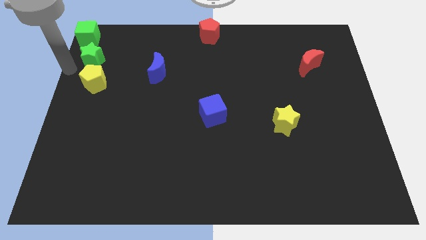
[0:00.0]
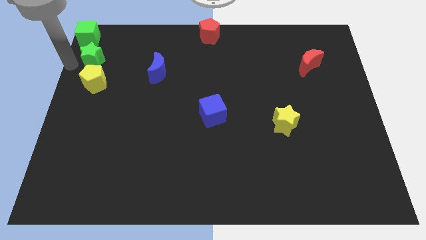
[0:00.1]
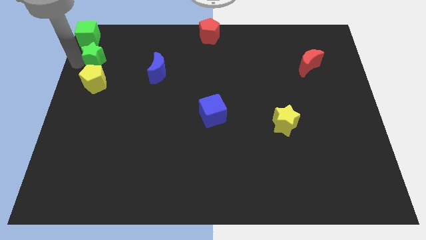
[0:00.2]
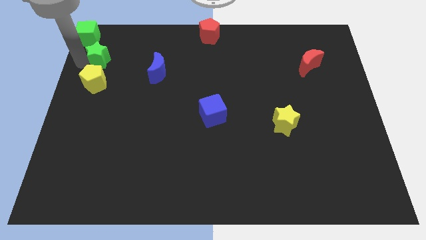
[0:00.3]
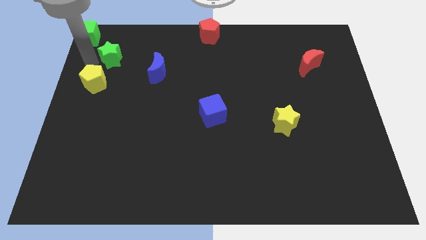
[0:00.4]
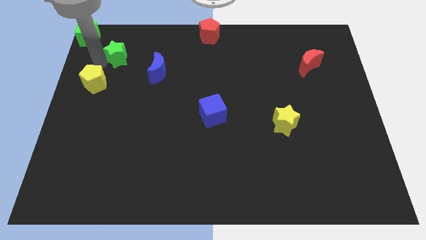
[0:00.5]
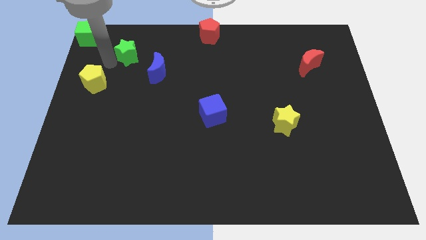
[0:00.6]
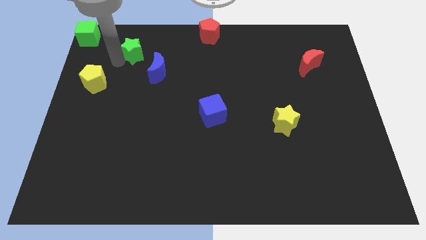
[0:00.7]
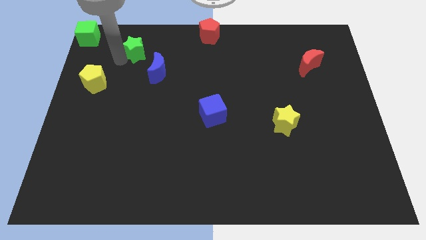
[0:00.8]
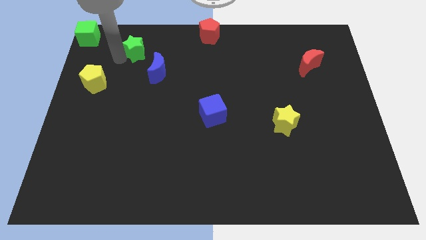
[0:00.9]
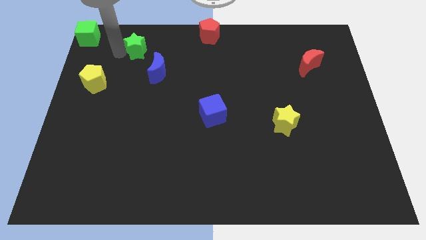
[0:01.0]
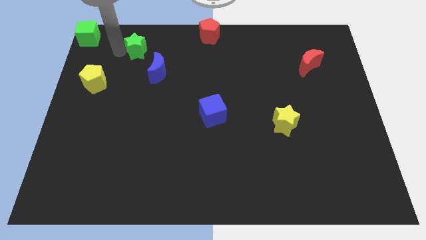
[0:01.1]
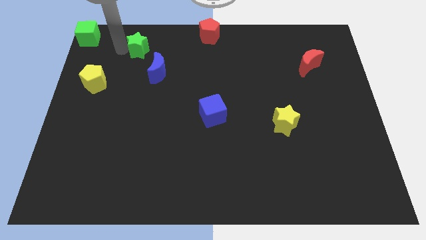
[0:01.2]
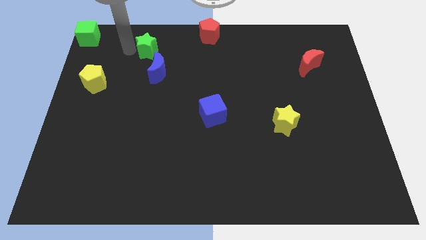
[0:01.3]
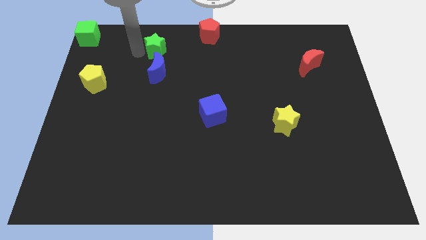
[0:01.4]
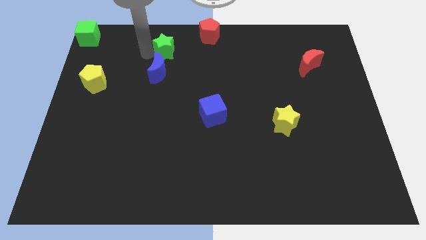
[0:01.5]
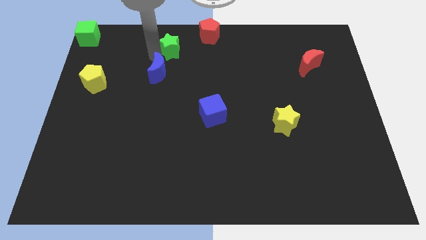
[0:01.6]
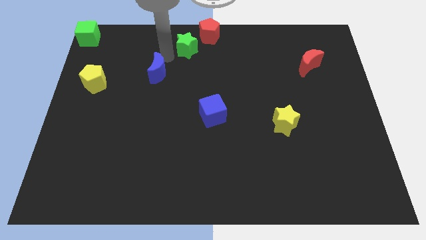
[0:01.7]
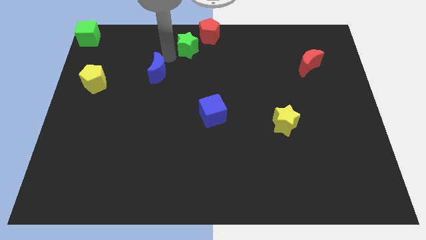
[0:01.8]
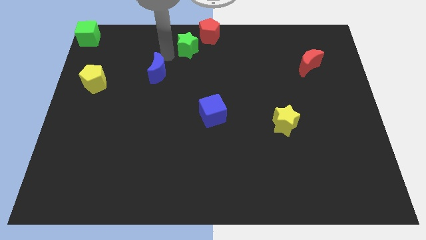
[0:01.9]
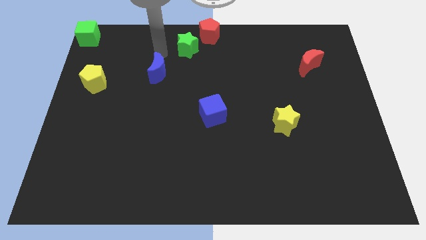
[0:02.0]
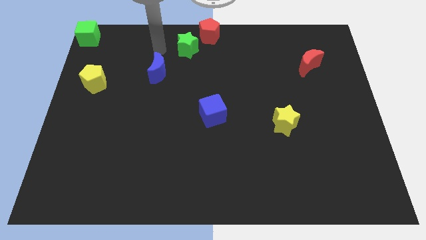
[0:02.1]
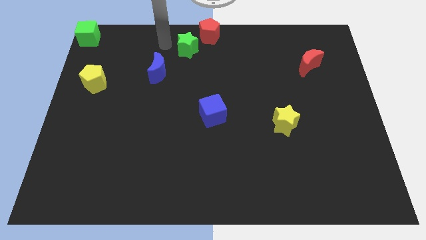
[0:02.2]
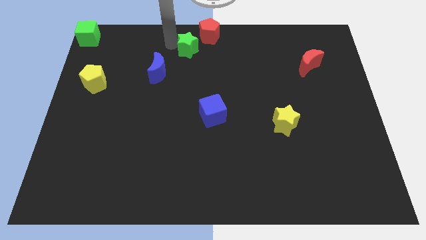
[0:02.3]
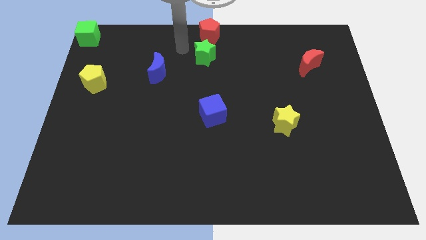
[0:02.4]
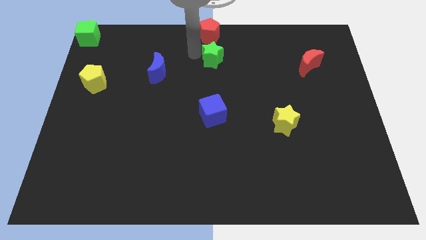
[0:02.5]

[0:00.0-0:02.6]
put the green star at the top side of the blue cube

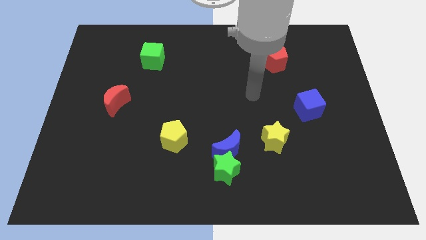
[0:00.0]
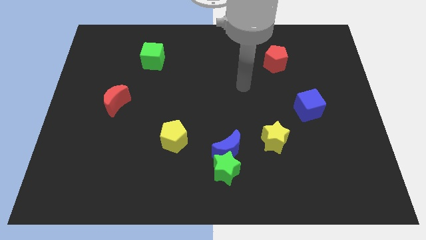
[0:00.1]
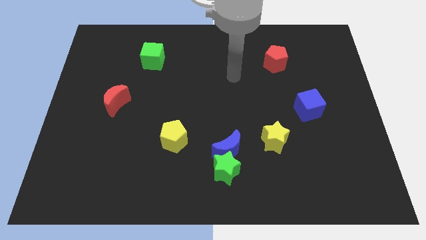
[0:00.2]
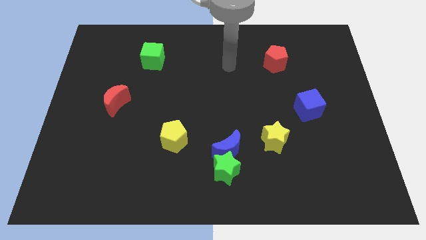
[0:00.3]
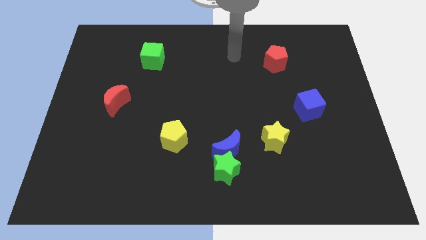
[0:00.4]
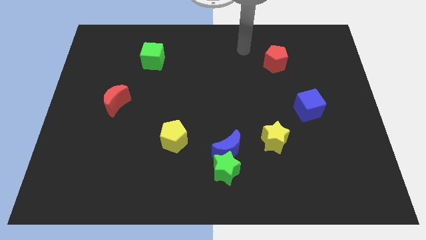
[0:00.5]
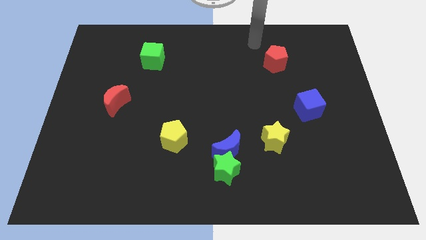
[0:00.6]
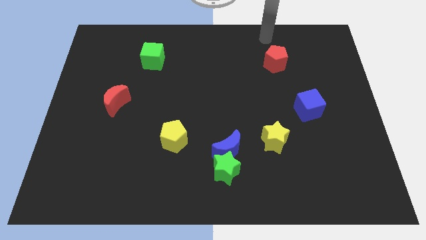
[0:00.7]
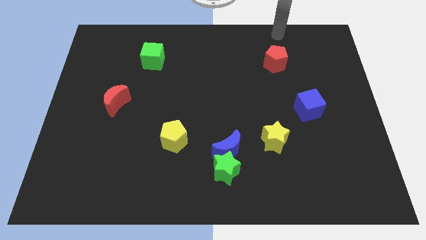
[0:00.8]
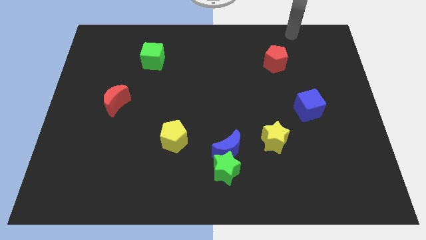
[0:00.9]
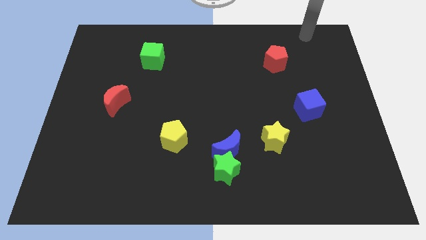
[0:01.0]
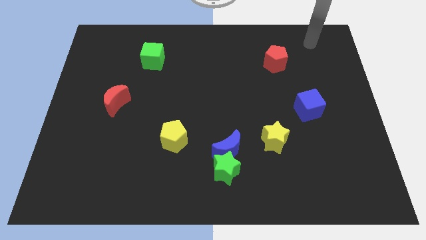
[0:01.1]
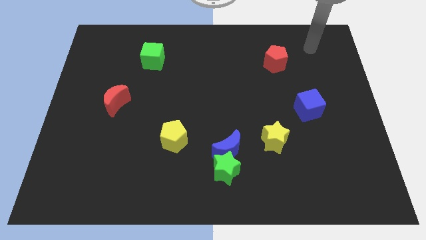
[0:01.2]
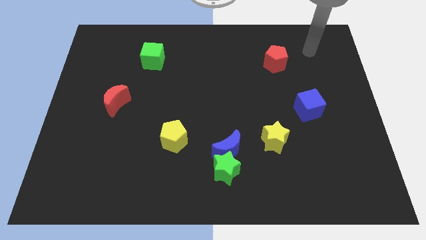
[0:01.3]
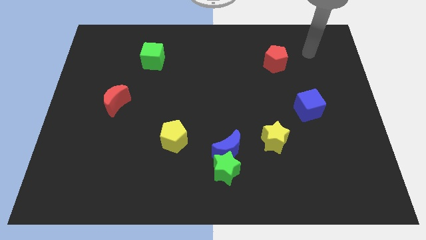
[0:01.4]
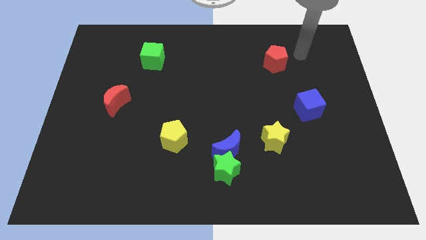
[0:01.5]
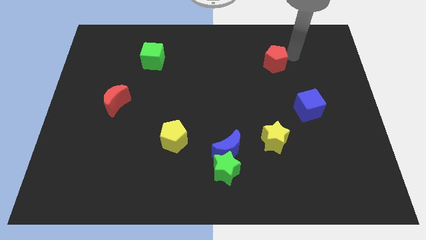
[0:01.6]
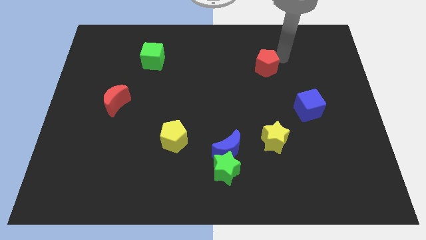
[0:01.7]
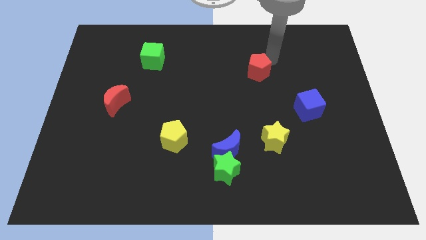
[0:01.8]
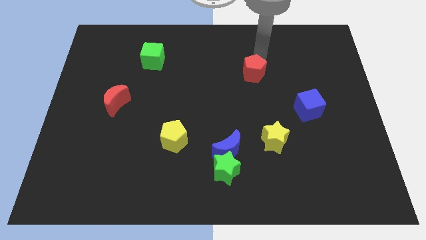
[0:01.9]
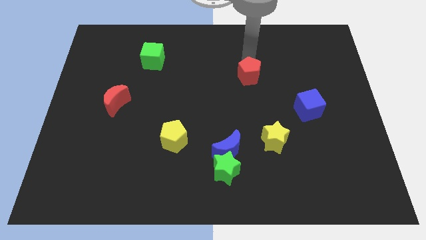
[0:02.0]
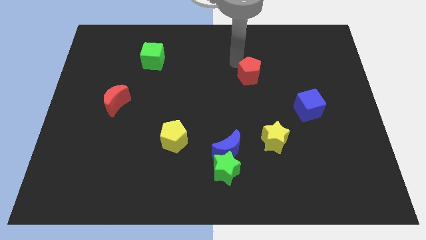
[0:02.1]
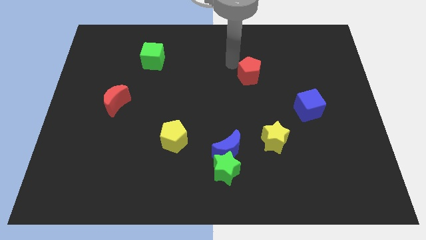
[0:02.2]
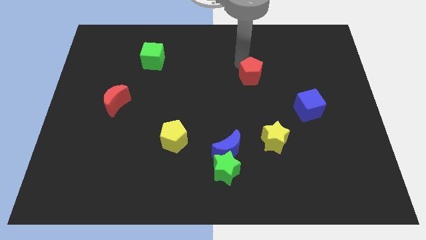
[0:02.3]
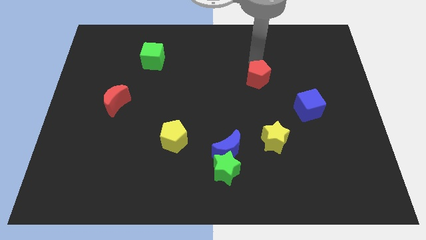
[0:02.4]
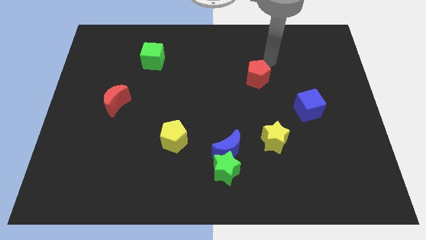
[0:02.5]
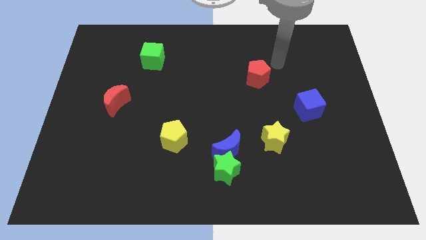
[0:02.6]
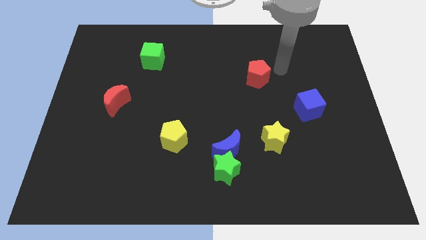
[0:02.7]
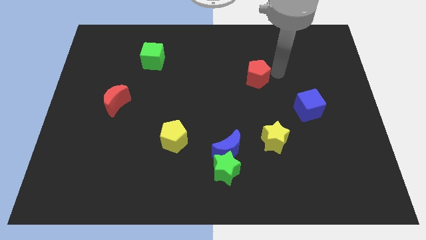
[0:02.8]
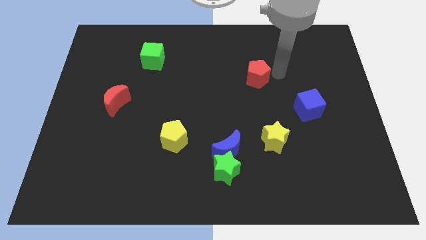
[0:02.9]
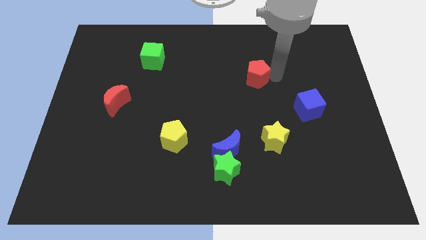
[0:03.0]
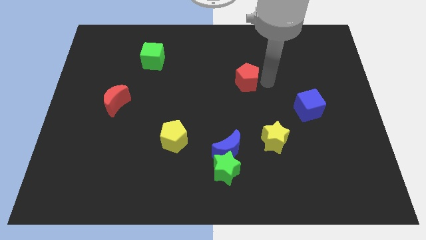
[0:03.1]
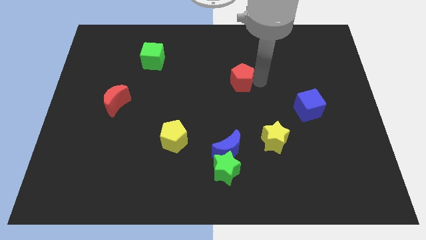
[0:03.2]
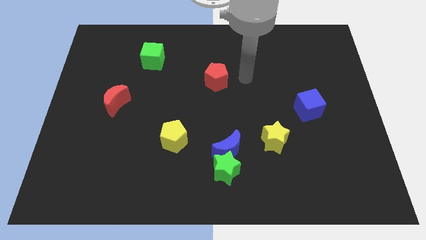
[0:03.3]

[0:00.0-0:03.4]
push the red pentagon towards the center

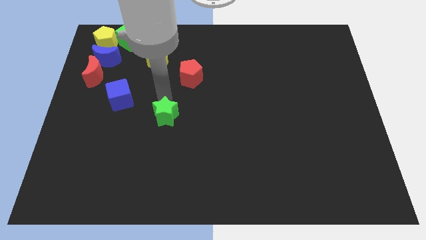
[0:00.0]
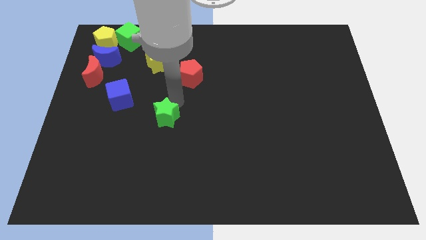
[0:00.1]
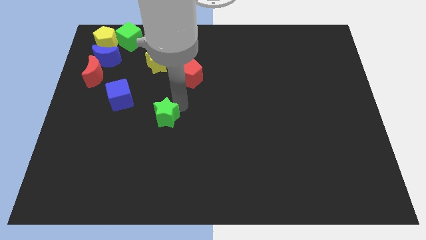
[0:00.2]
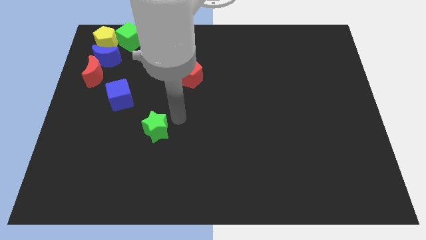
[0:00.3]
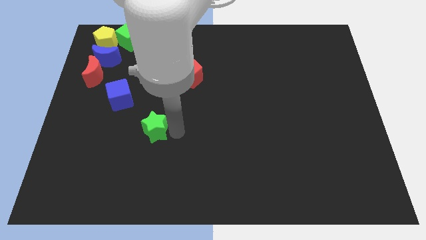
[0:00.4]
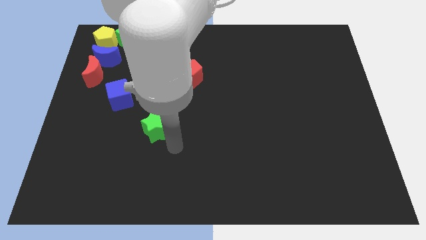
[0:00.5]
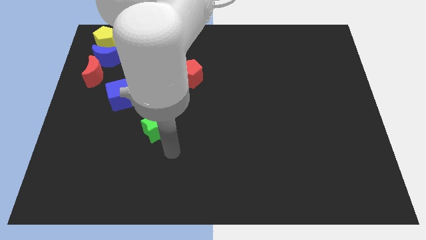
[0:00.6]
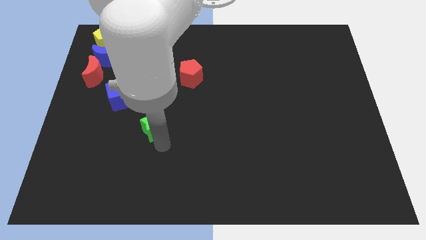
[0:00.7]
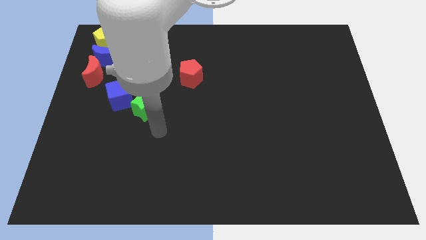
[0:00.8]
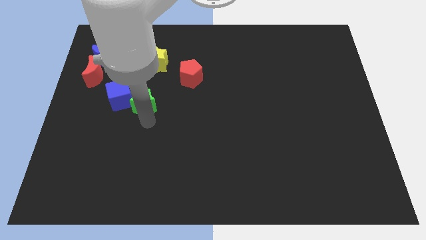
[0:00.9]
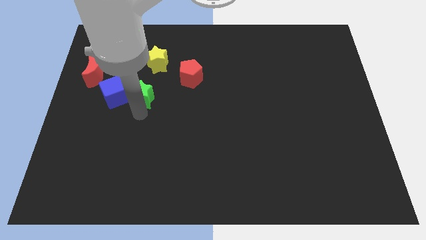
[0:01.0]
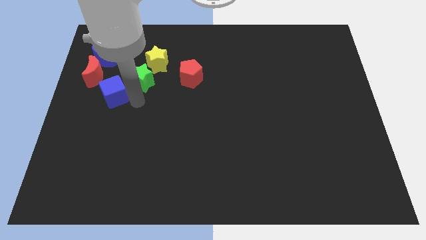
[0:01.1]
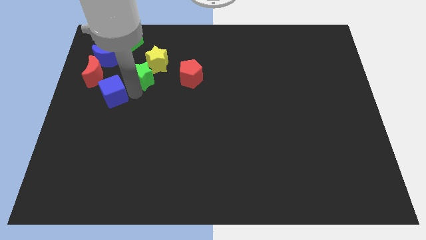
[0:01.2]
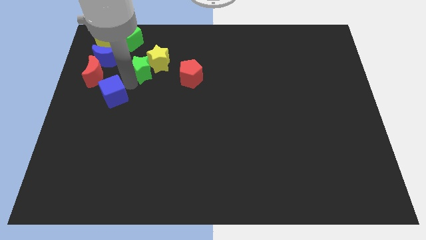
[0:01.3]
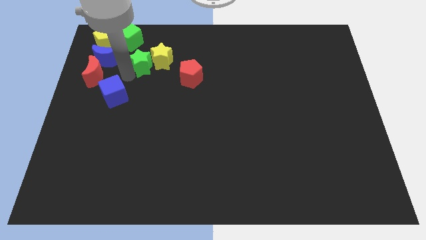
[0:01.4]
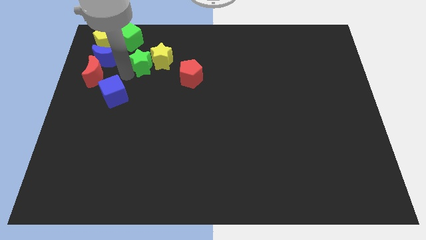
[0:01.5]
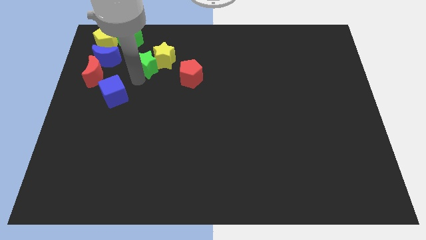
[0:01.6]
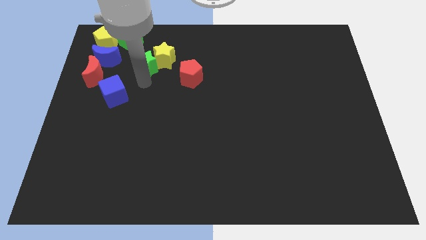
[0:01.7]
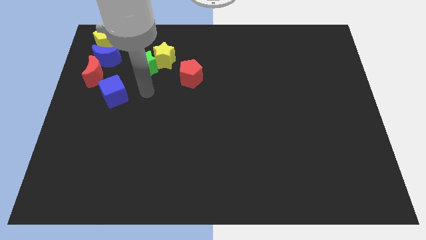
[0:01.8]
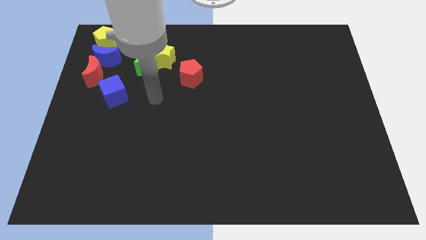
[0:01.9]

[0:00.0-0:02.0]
move the green star into the yellow star

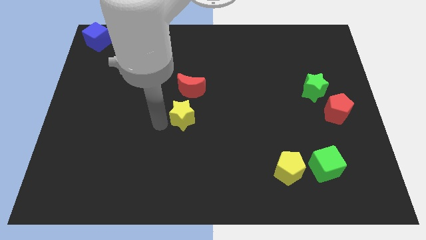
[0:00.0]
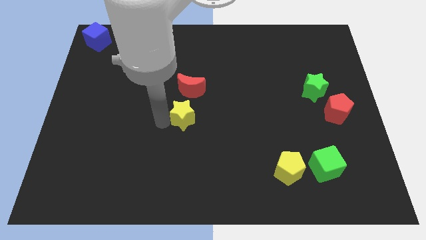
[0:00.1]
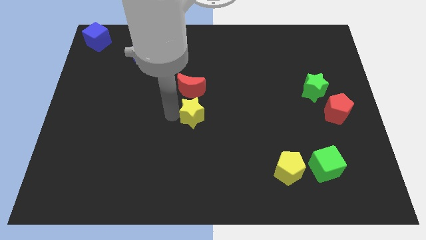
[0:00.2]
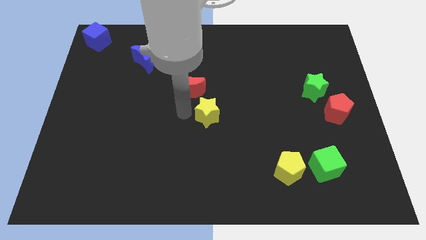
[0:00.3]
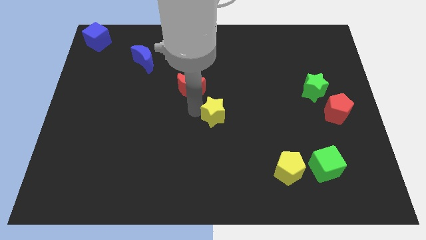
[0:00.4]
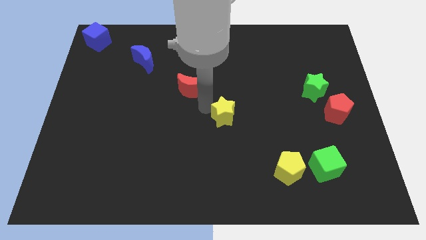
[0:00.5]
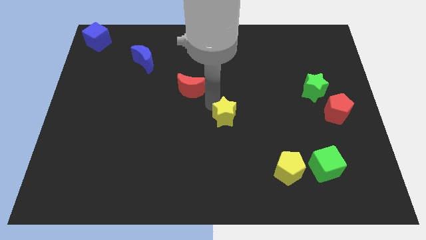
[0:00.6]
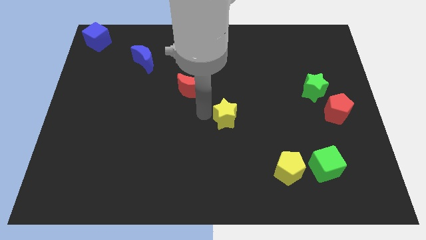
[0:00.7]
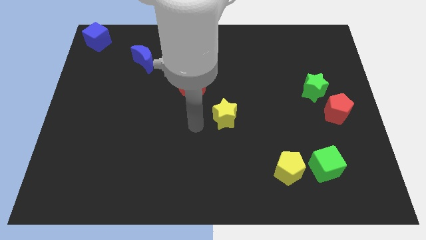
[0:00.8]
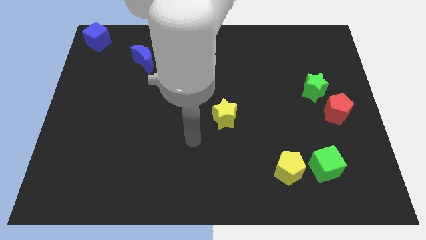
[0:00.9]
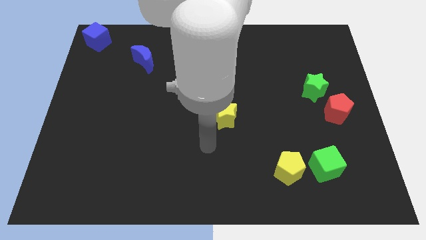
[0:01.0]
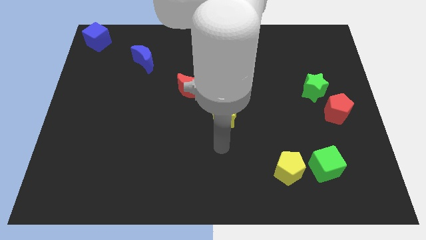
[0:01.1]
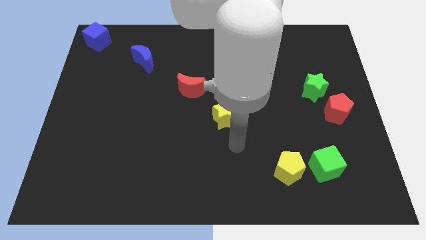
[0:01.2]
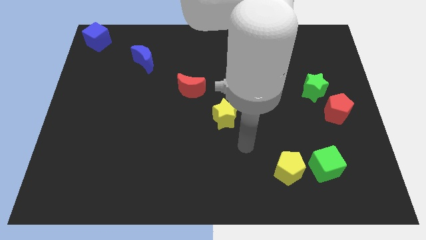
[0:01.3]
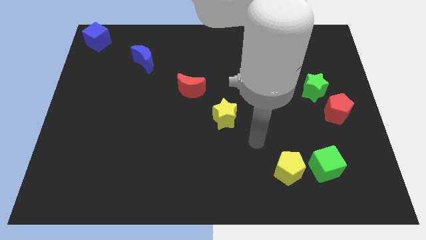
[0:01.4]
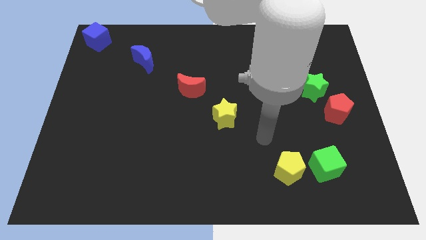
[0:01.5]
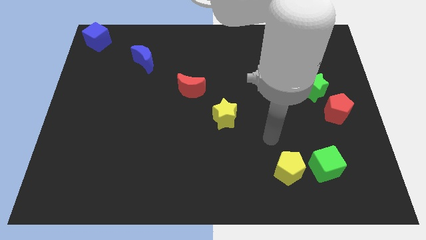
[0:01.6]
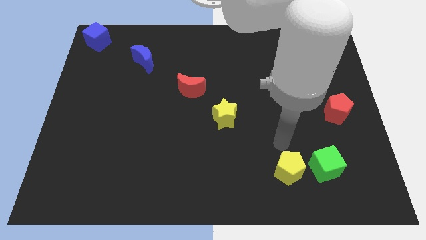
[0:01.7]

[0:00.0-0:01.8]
move the yellow star diagonally right of red crescent
